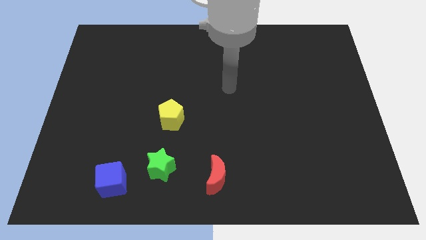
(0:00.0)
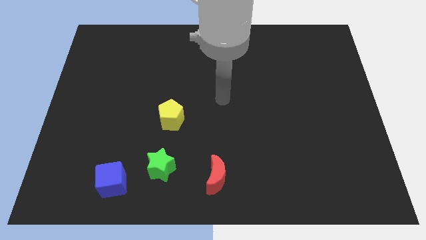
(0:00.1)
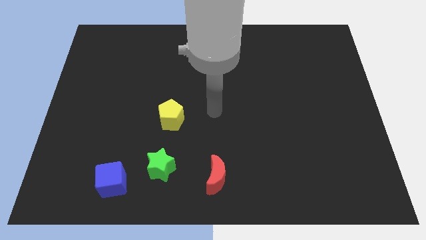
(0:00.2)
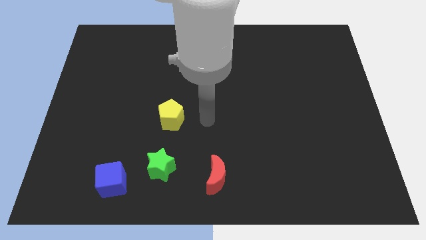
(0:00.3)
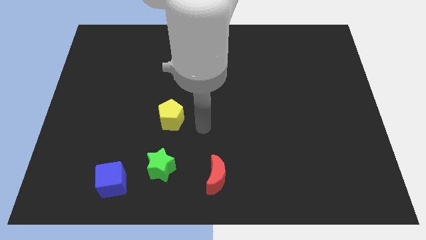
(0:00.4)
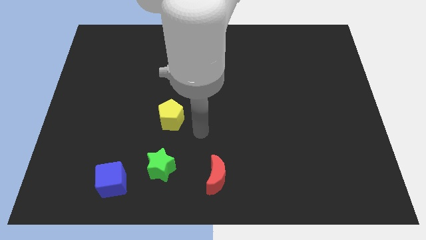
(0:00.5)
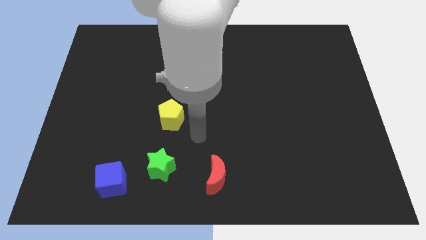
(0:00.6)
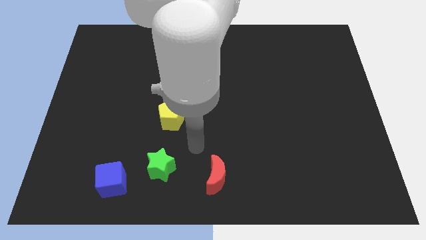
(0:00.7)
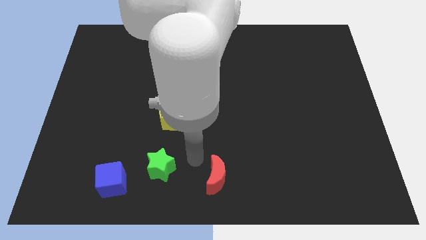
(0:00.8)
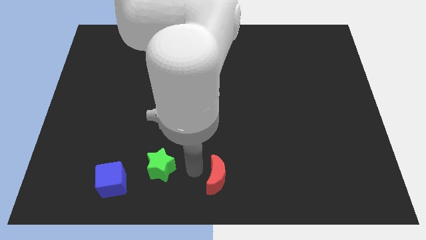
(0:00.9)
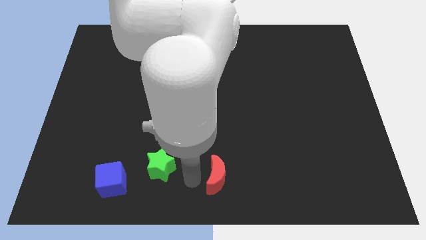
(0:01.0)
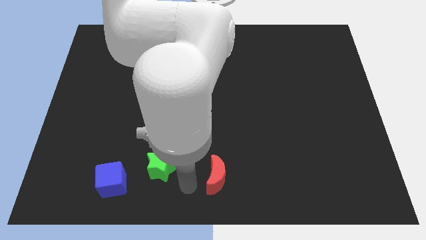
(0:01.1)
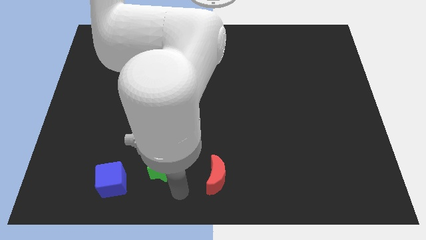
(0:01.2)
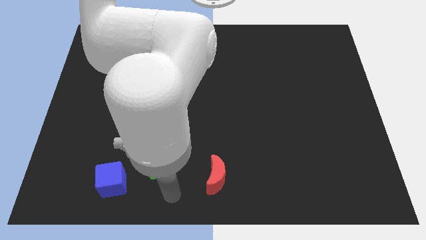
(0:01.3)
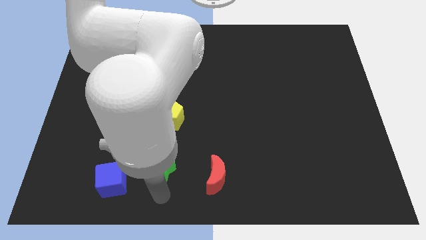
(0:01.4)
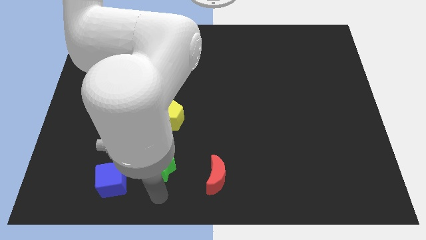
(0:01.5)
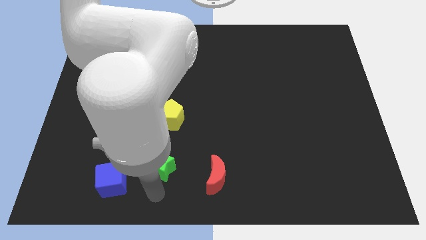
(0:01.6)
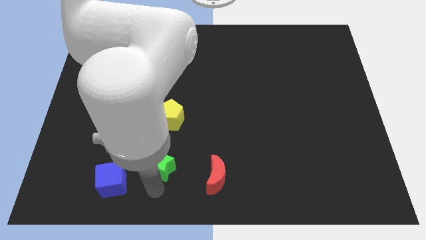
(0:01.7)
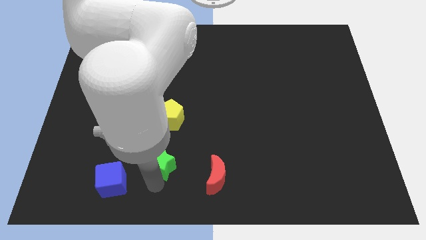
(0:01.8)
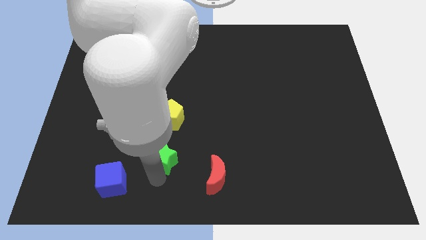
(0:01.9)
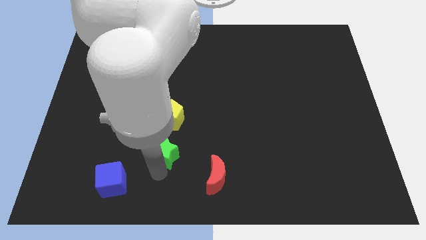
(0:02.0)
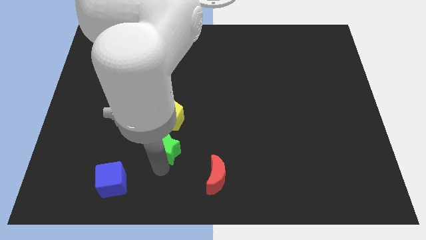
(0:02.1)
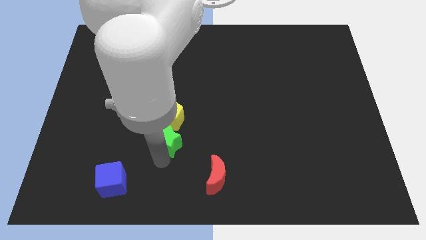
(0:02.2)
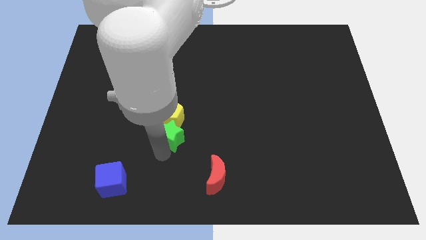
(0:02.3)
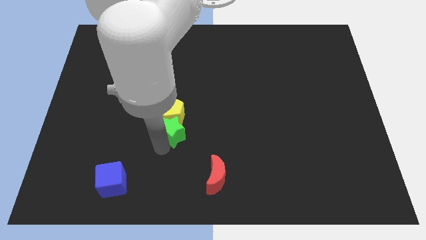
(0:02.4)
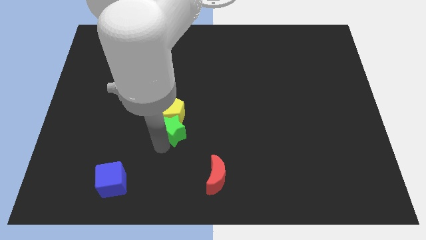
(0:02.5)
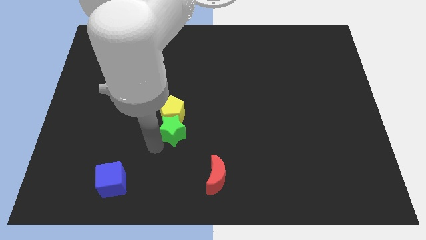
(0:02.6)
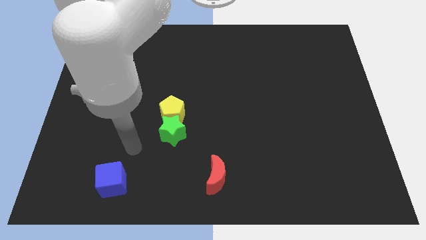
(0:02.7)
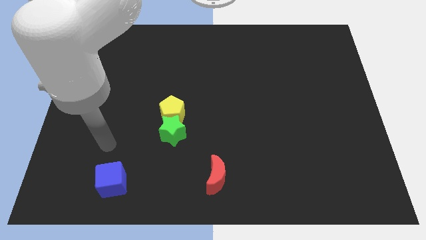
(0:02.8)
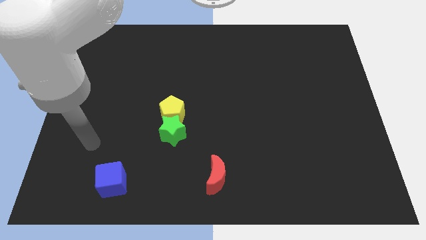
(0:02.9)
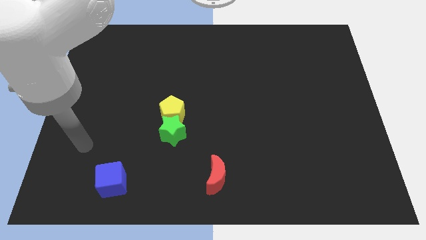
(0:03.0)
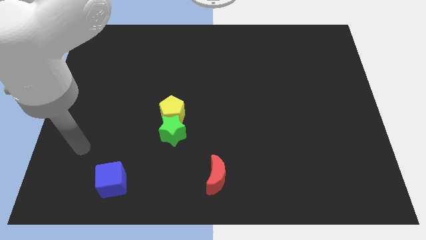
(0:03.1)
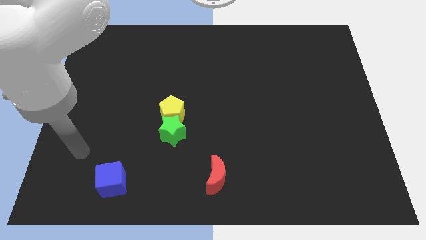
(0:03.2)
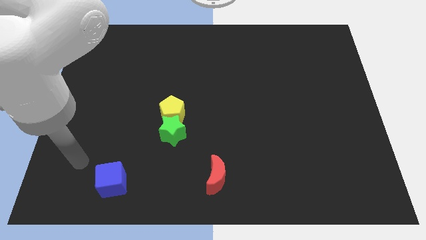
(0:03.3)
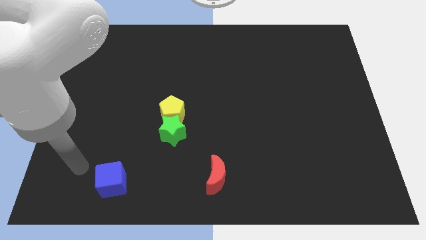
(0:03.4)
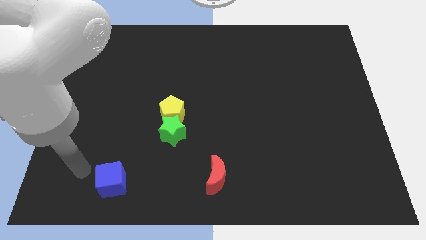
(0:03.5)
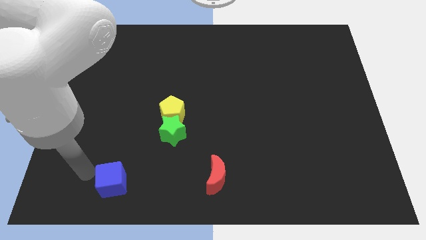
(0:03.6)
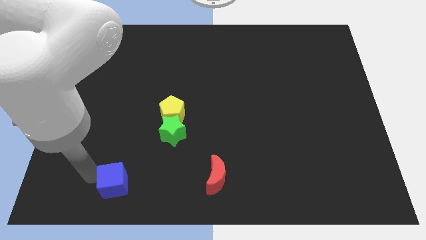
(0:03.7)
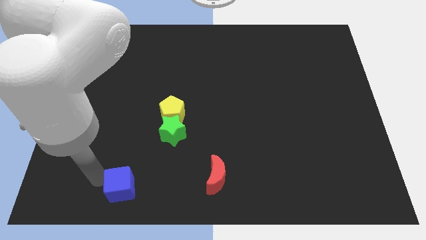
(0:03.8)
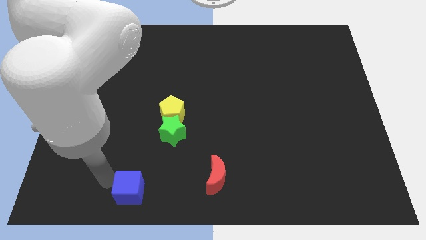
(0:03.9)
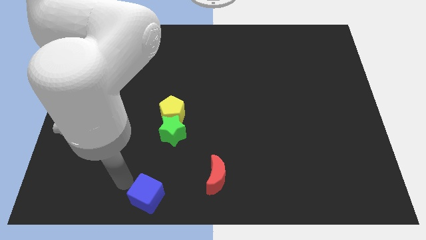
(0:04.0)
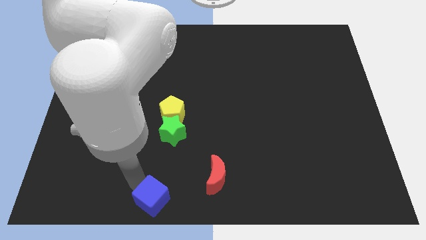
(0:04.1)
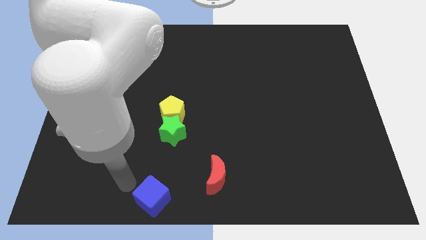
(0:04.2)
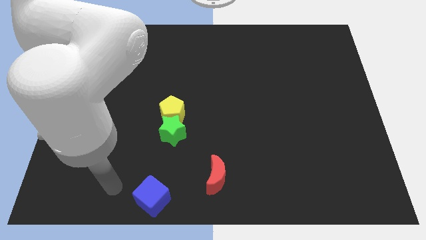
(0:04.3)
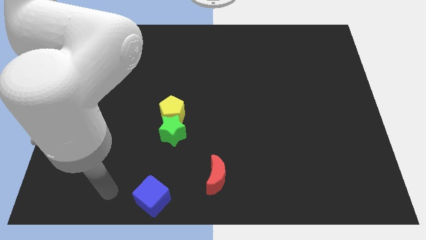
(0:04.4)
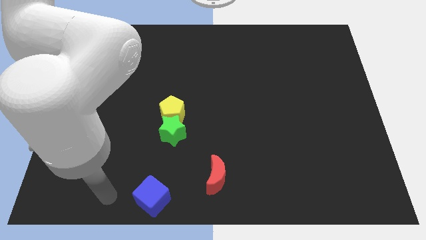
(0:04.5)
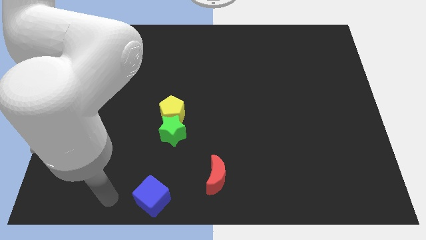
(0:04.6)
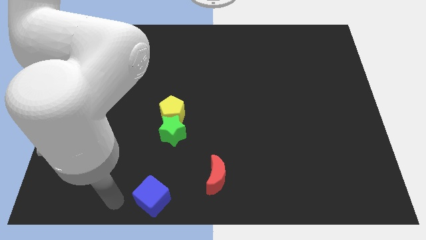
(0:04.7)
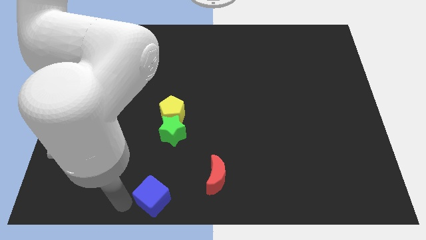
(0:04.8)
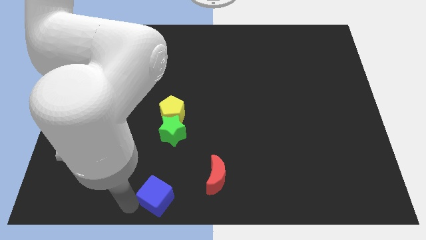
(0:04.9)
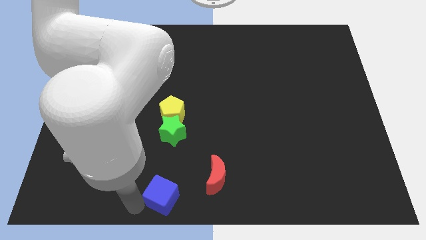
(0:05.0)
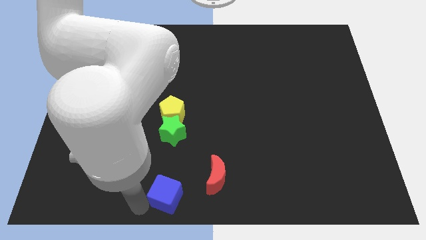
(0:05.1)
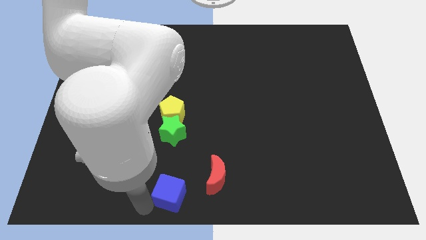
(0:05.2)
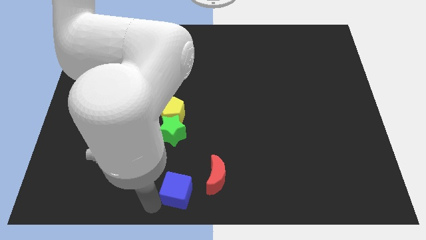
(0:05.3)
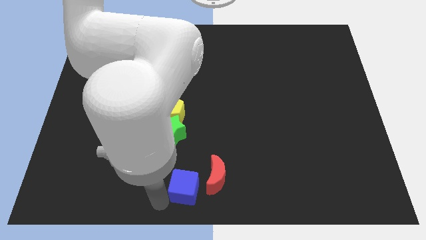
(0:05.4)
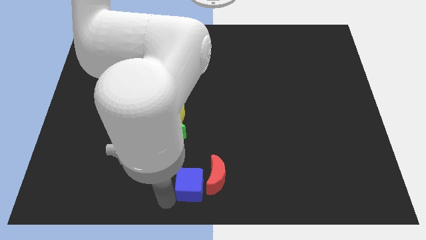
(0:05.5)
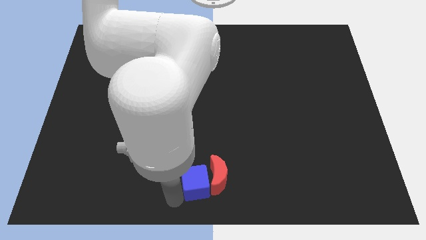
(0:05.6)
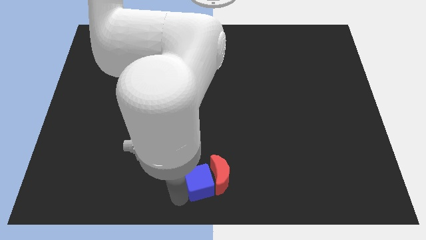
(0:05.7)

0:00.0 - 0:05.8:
move the blue block close to the red moon

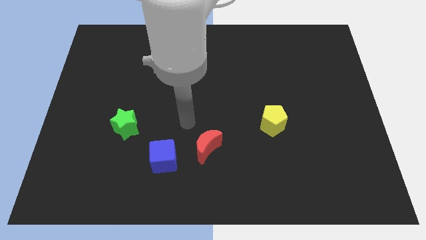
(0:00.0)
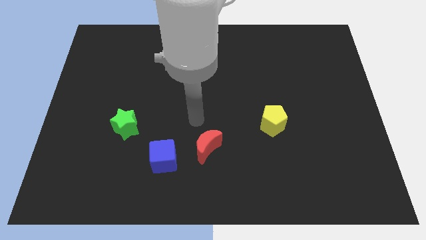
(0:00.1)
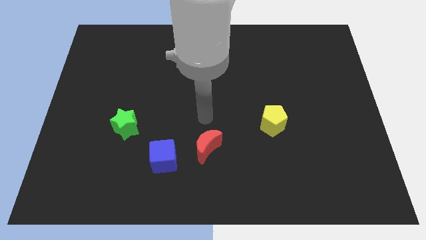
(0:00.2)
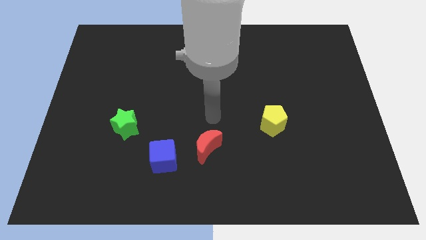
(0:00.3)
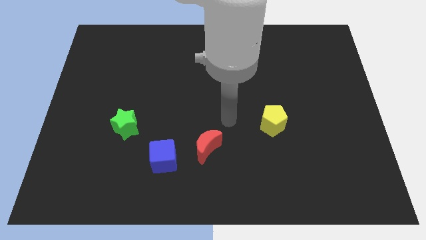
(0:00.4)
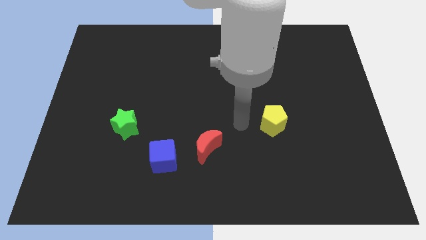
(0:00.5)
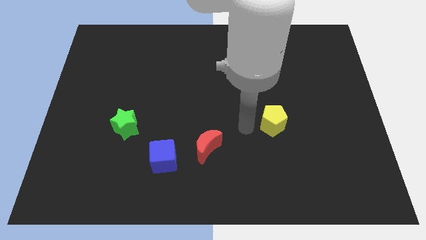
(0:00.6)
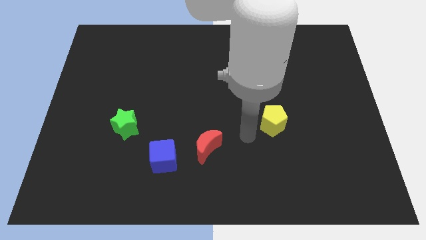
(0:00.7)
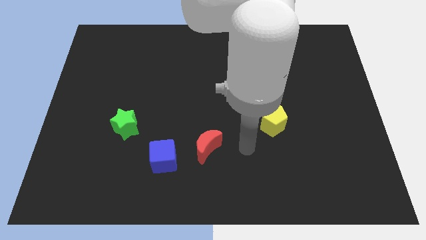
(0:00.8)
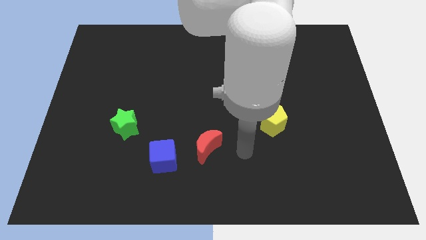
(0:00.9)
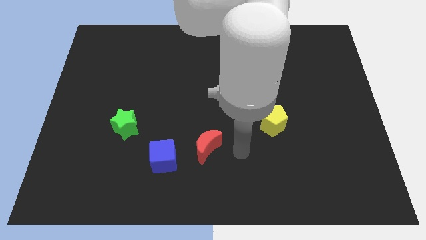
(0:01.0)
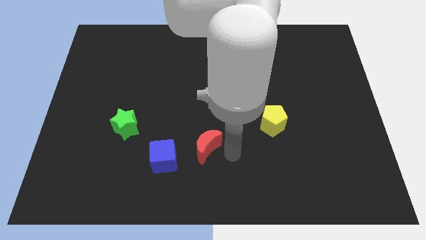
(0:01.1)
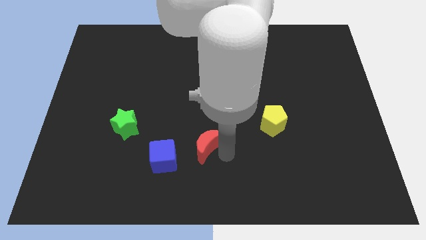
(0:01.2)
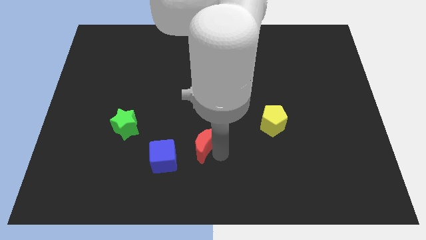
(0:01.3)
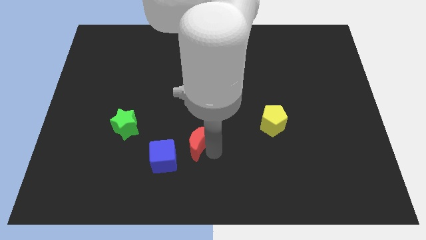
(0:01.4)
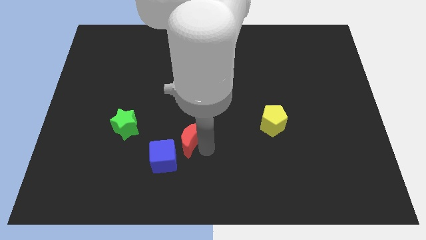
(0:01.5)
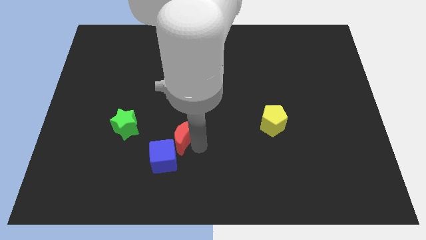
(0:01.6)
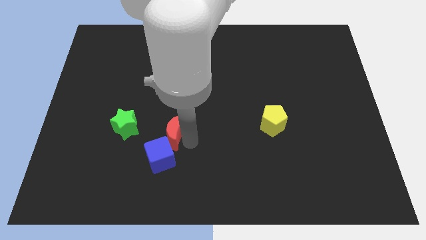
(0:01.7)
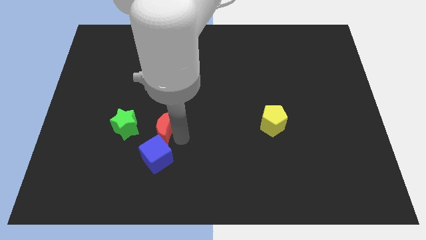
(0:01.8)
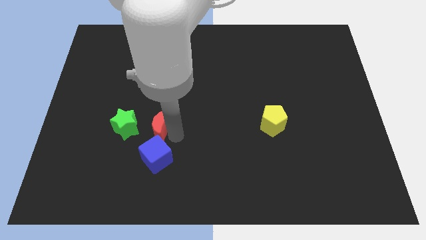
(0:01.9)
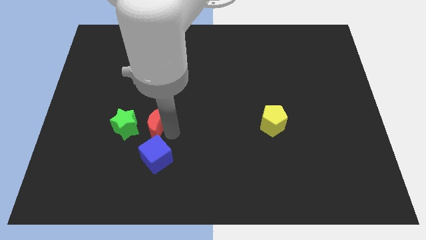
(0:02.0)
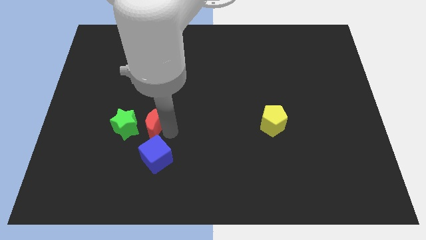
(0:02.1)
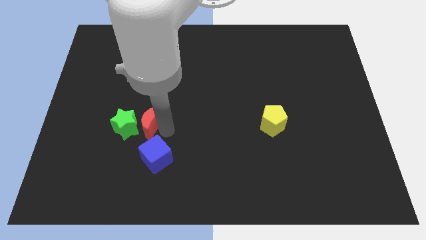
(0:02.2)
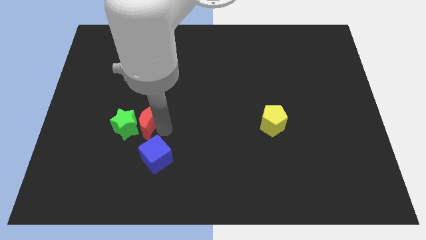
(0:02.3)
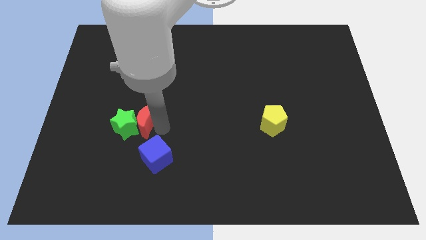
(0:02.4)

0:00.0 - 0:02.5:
put the red moon to the green block

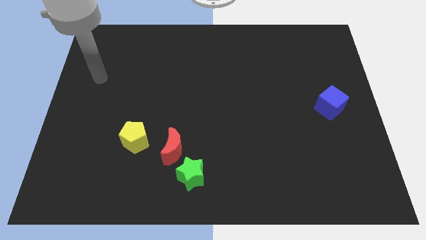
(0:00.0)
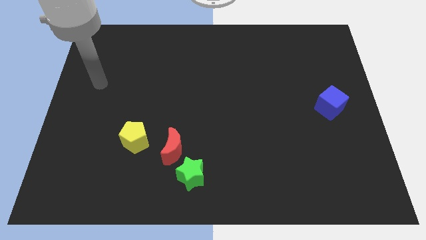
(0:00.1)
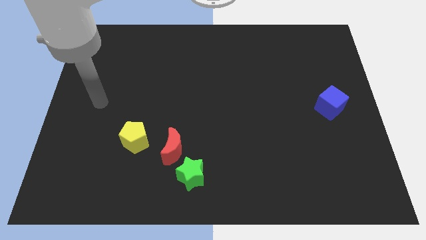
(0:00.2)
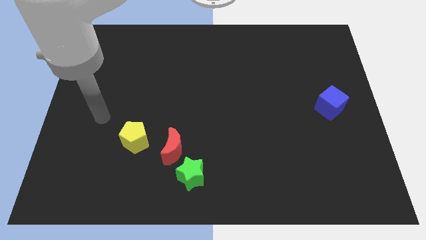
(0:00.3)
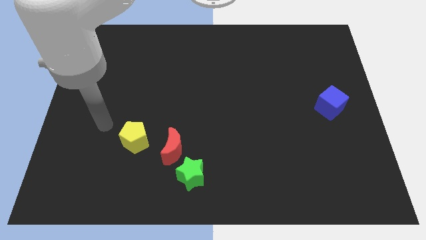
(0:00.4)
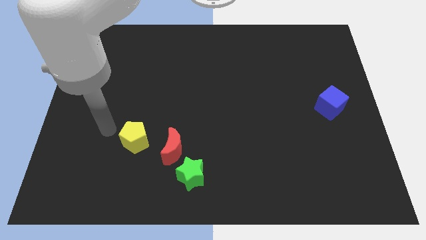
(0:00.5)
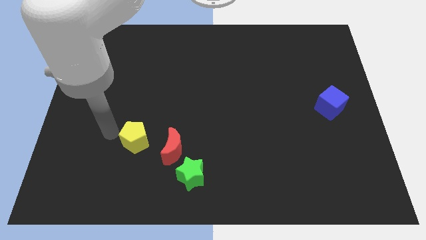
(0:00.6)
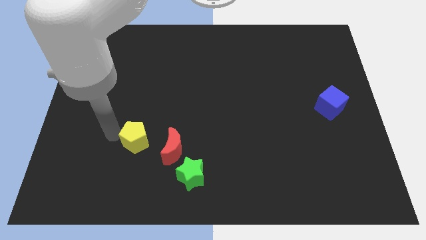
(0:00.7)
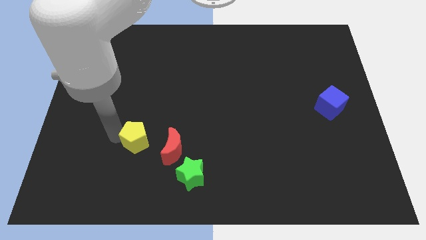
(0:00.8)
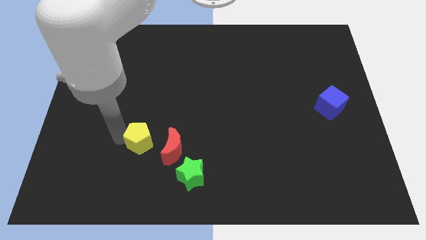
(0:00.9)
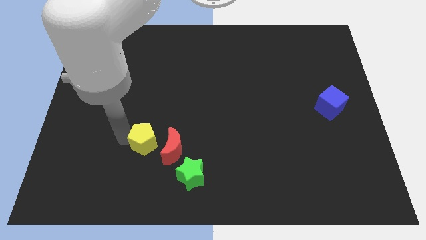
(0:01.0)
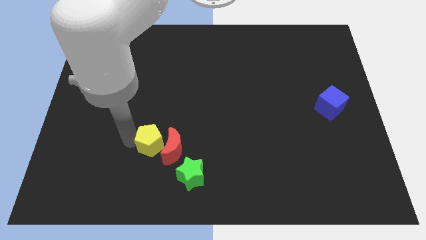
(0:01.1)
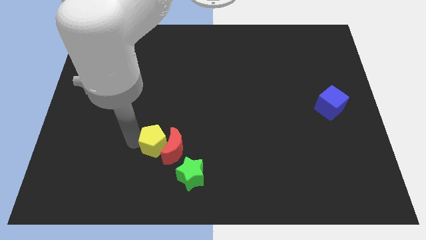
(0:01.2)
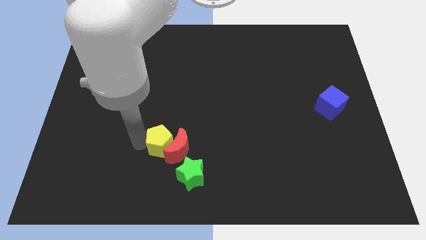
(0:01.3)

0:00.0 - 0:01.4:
move the pentagon to the red moon
